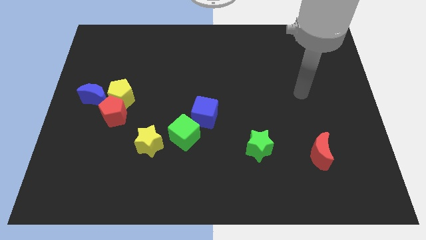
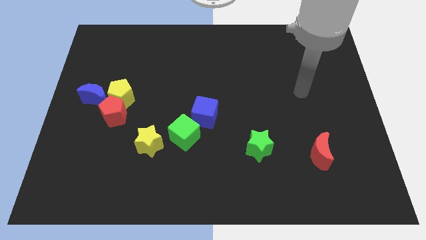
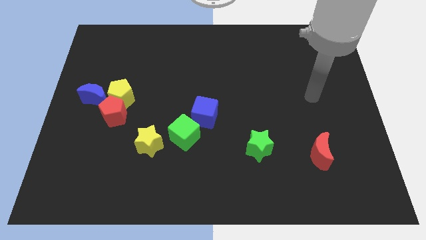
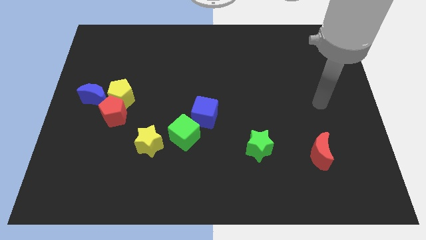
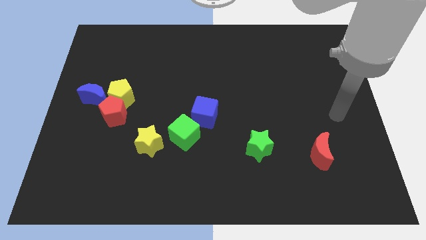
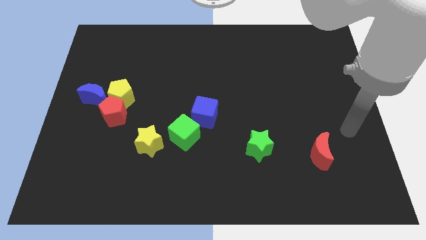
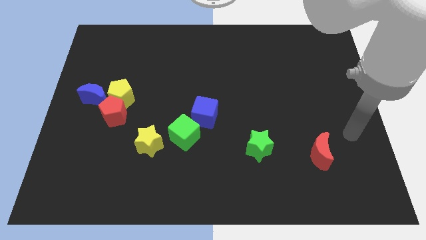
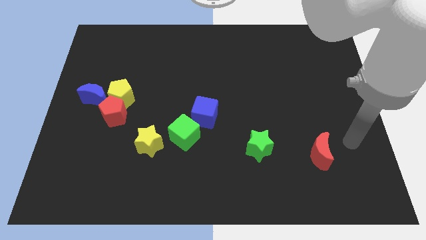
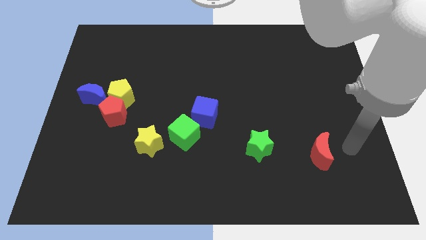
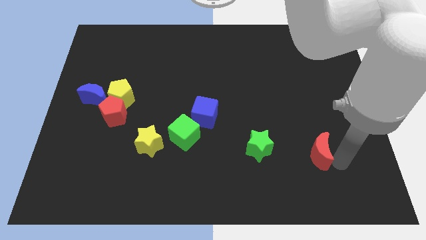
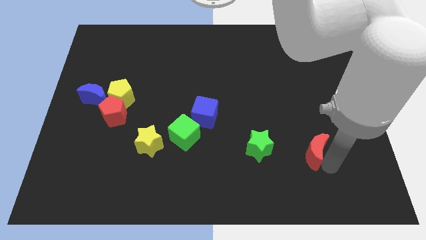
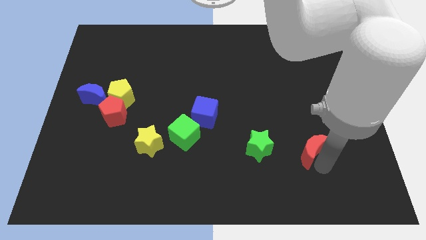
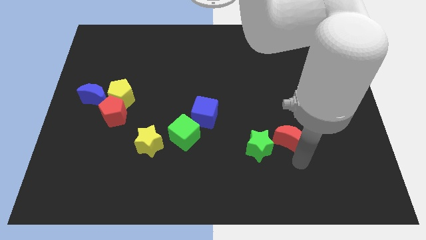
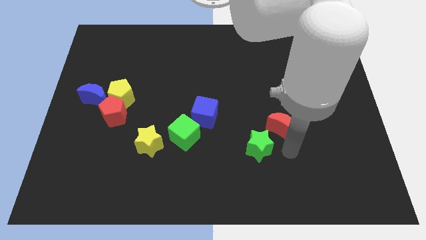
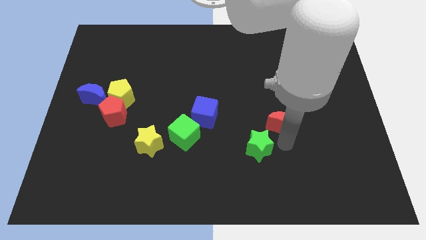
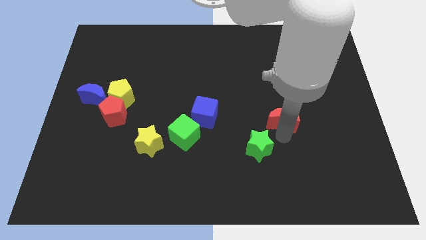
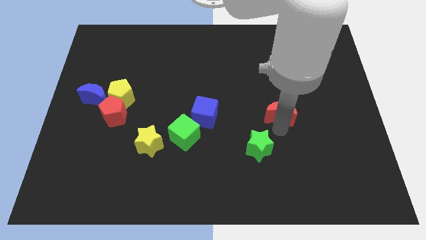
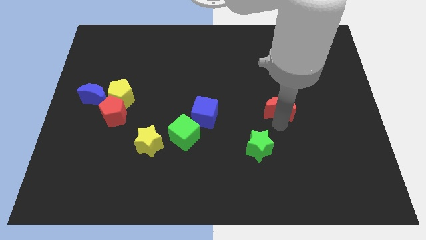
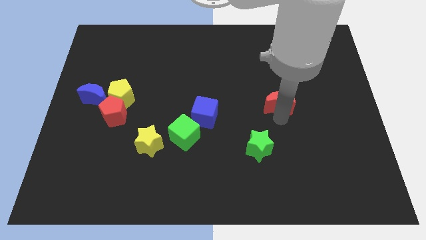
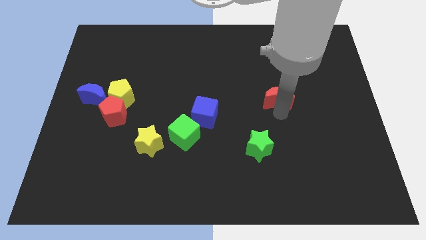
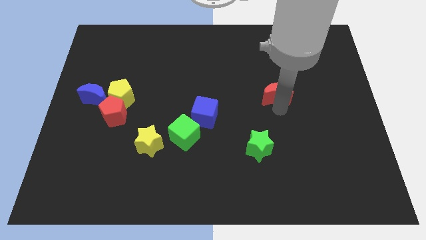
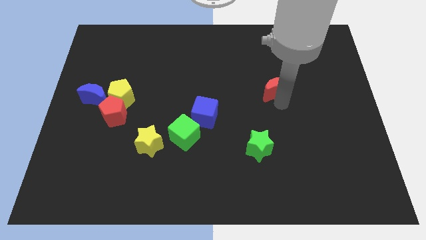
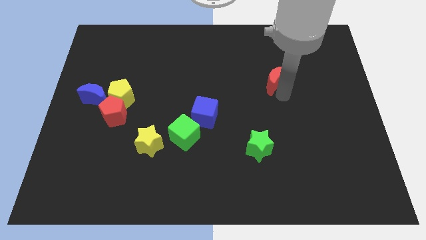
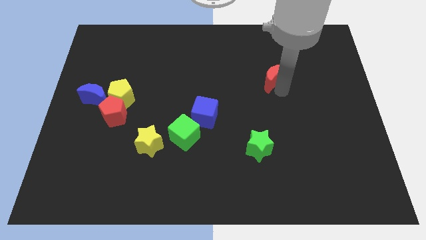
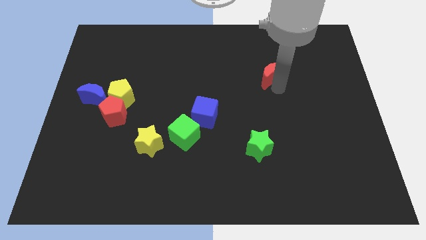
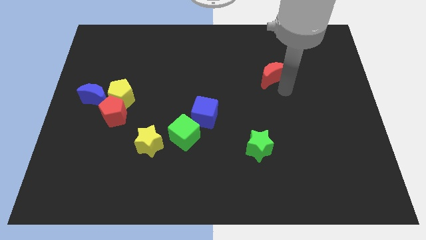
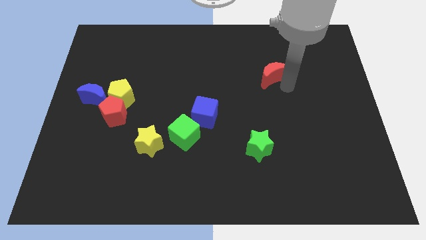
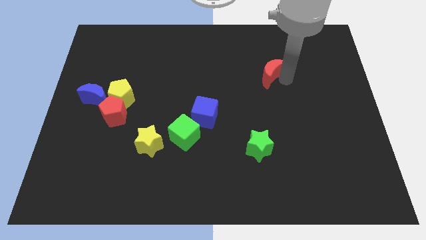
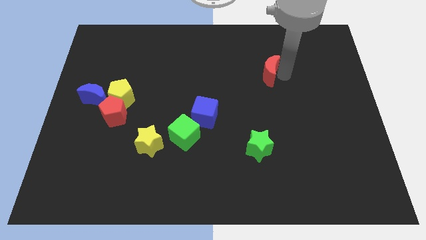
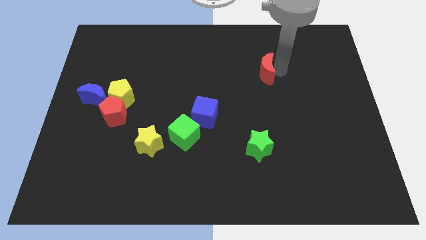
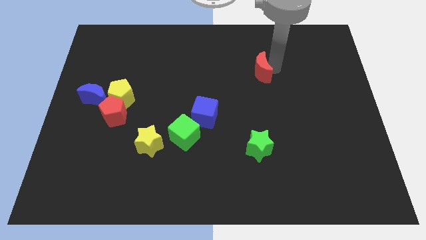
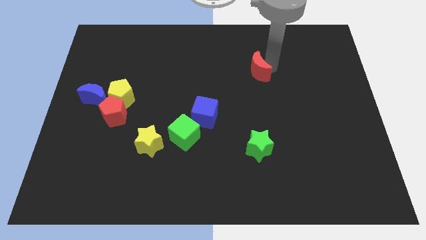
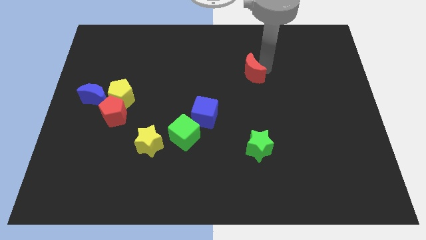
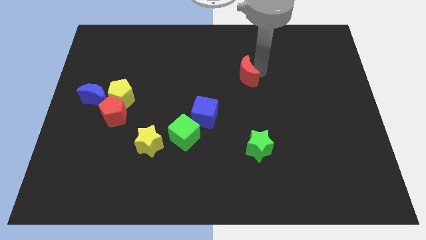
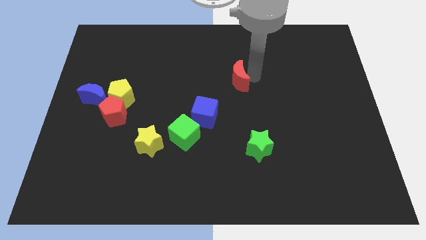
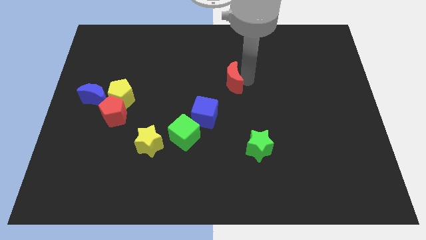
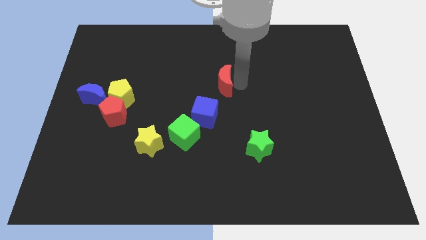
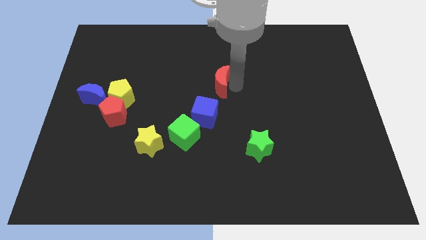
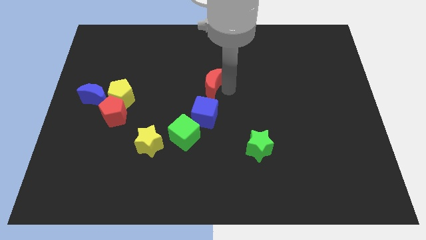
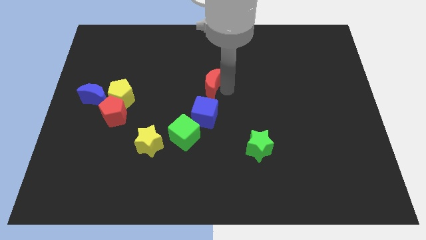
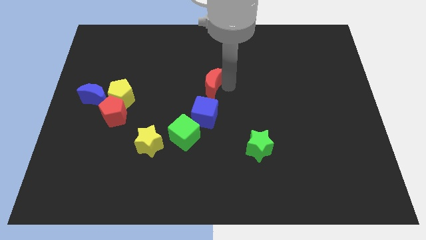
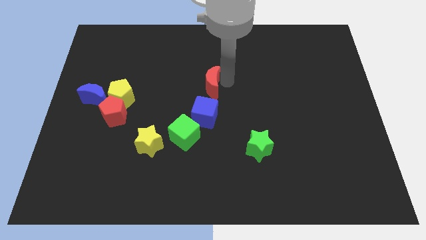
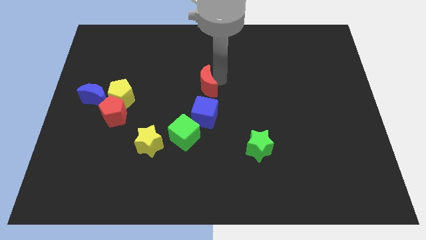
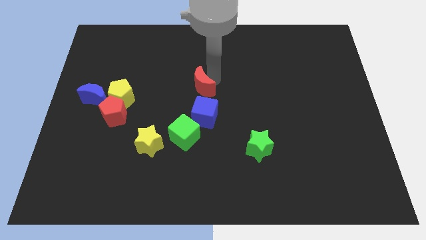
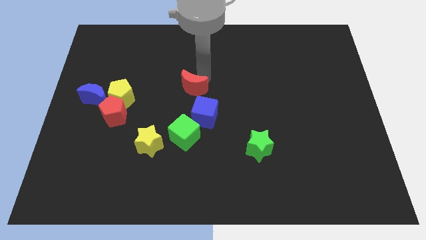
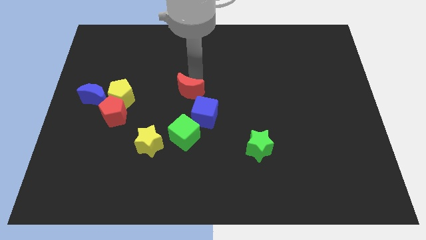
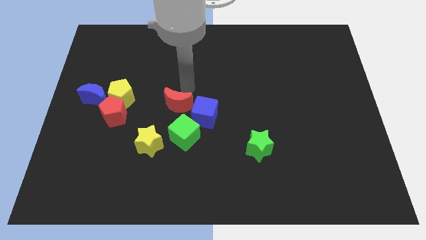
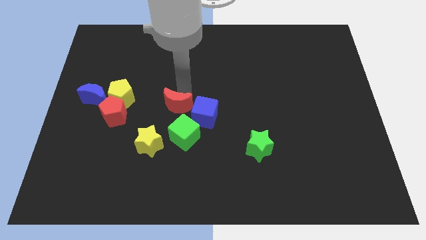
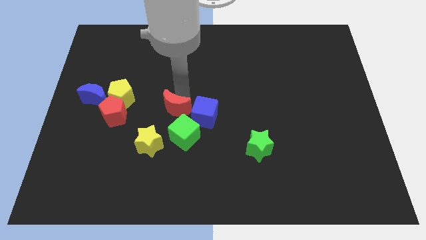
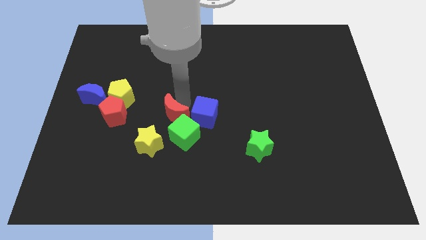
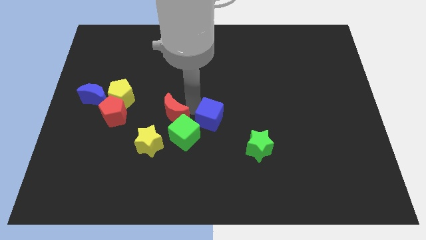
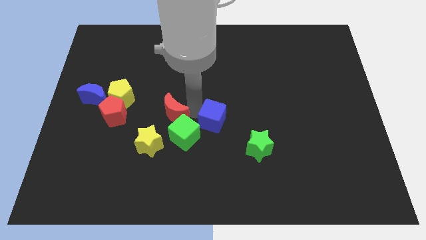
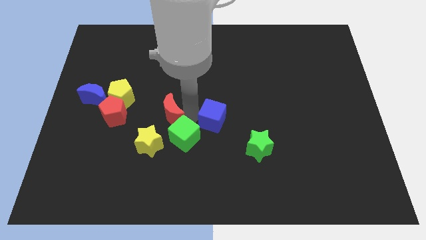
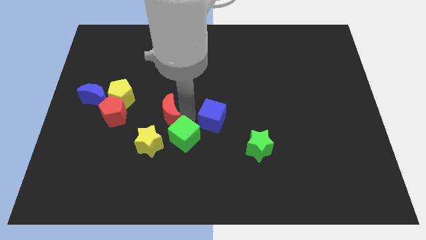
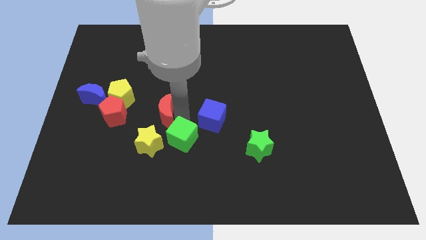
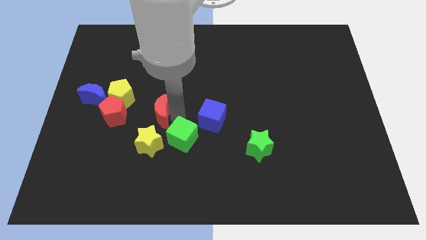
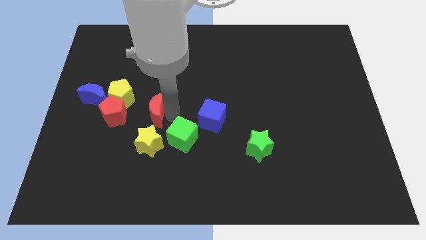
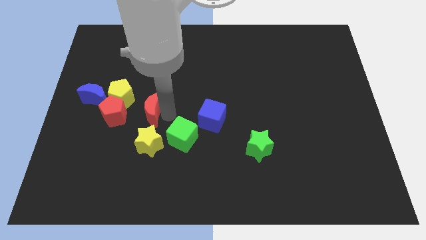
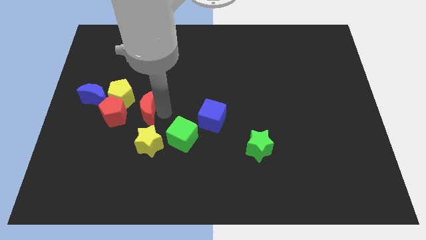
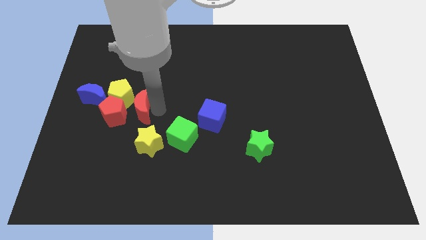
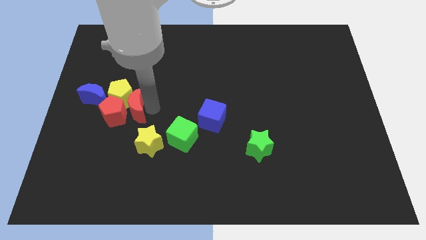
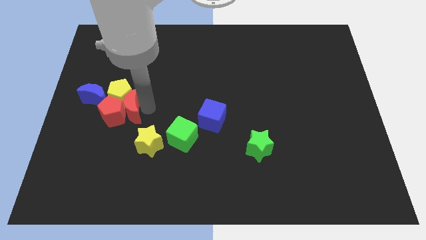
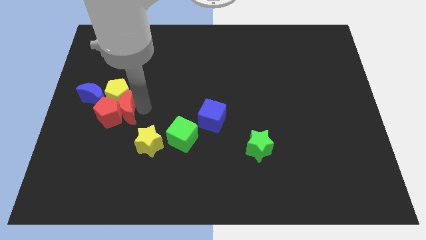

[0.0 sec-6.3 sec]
move the red moon close to the red pentagon

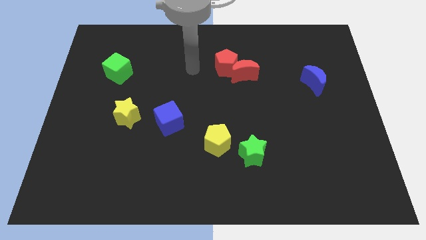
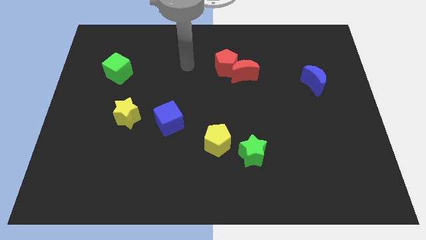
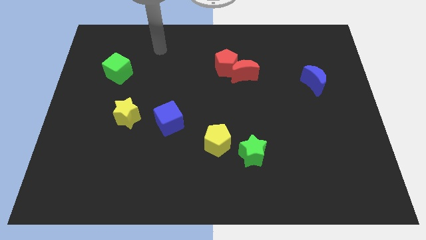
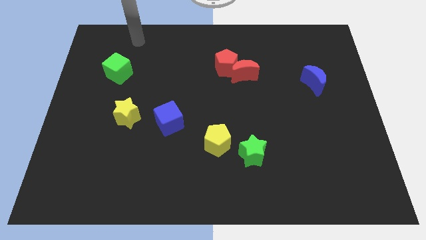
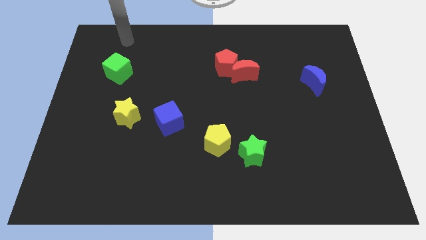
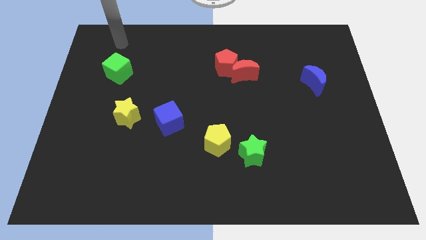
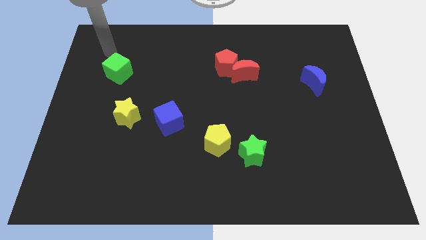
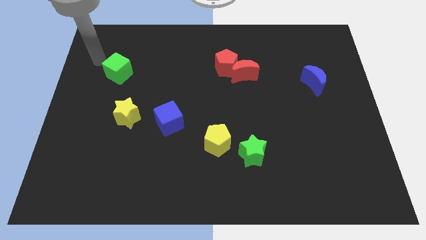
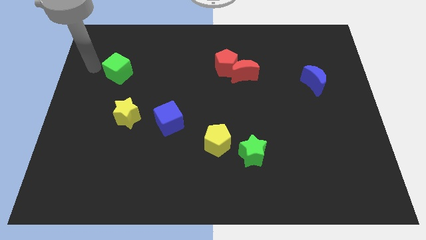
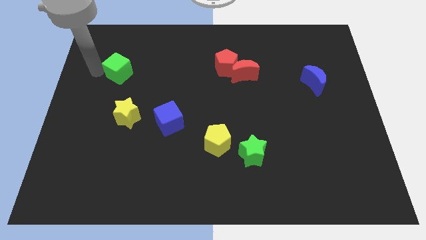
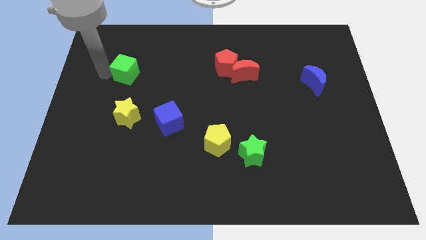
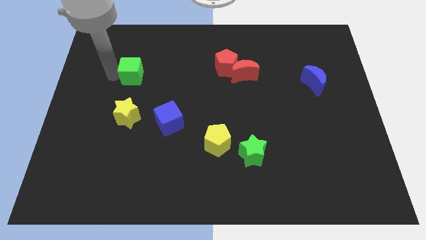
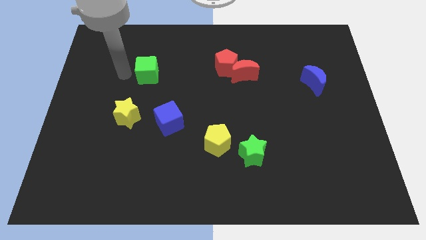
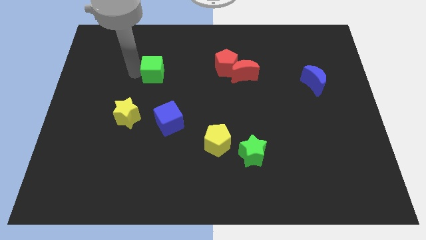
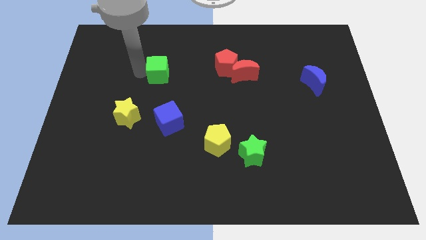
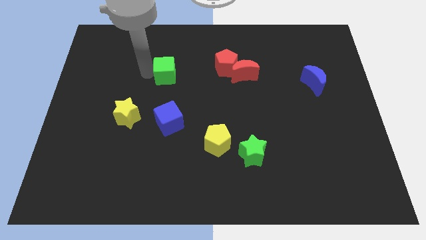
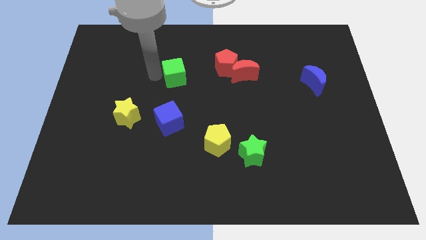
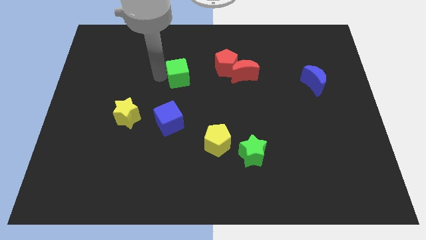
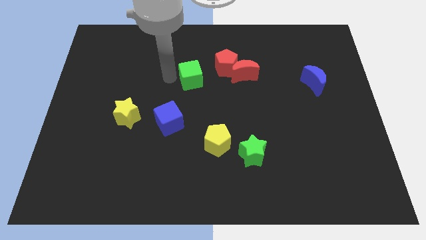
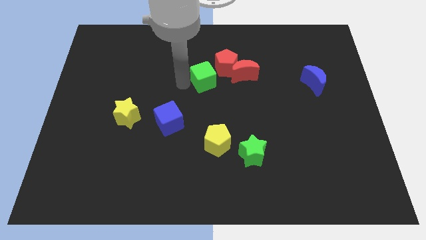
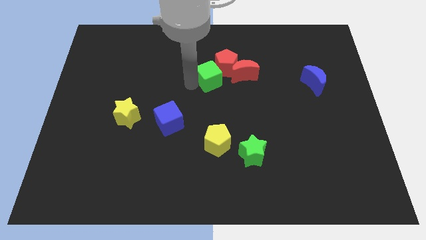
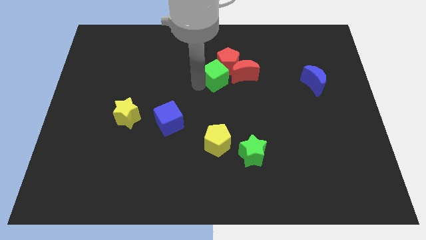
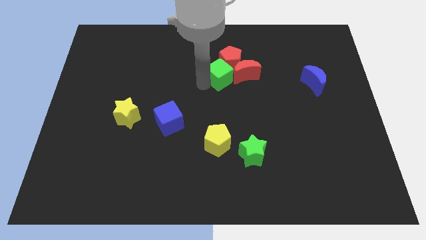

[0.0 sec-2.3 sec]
slide the green cube next to the red pentagon
